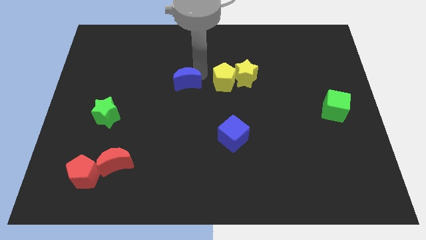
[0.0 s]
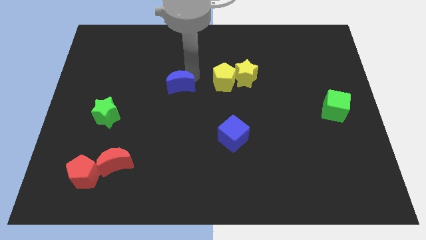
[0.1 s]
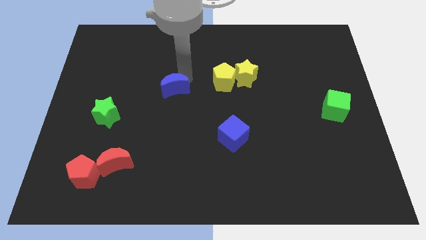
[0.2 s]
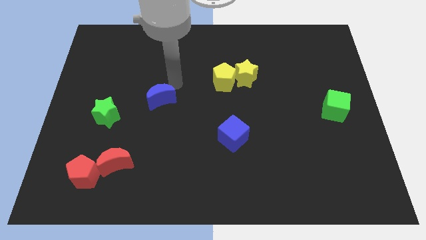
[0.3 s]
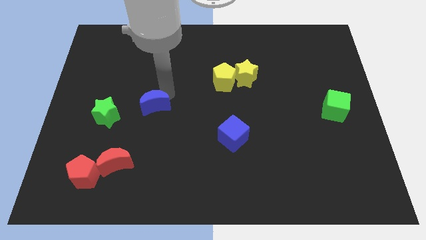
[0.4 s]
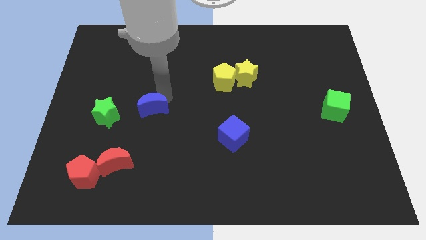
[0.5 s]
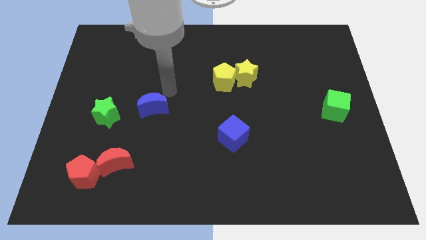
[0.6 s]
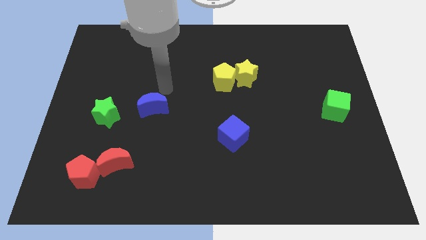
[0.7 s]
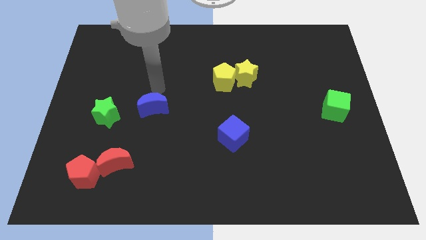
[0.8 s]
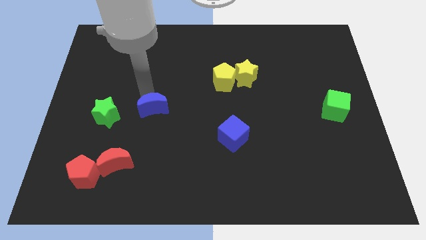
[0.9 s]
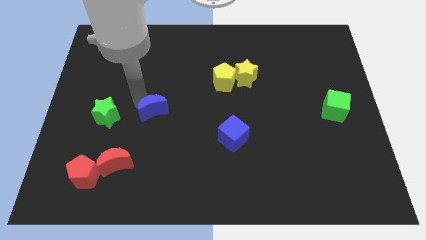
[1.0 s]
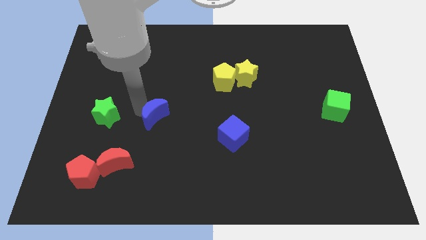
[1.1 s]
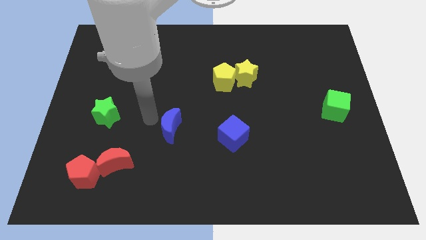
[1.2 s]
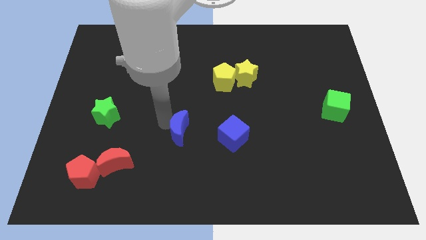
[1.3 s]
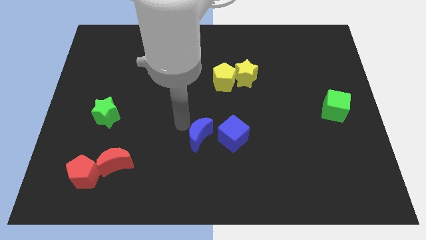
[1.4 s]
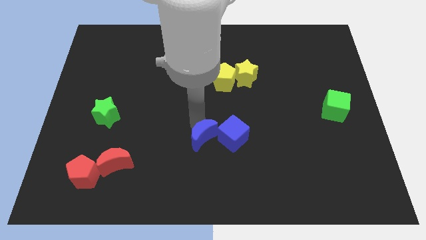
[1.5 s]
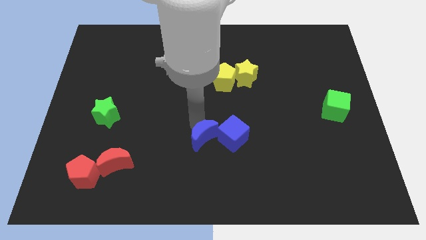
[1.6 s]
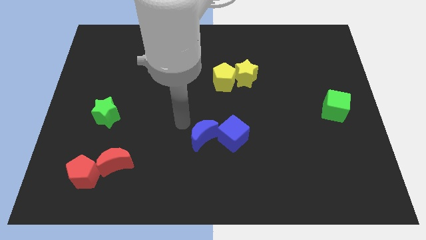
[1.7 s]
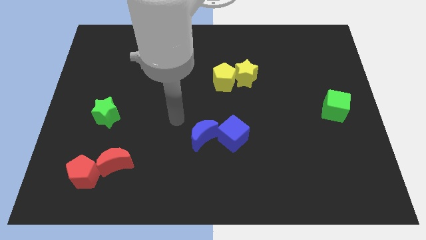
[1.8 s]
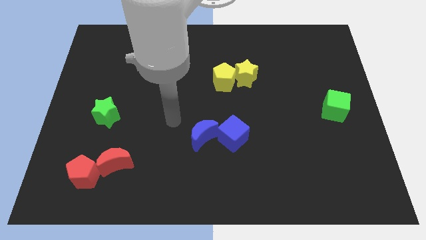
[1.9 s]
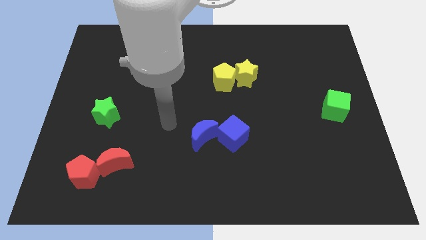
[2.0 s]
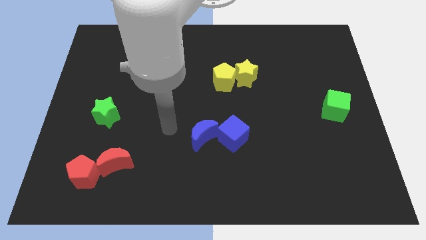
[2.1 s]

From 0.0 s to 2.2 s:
place the blue moon to the left of blue cube

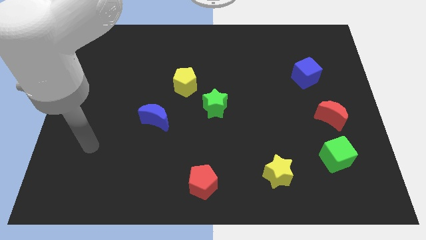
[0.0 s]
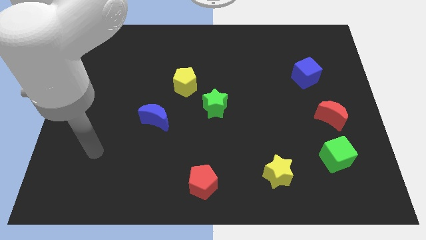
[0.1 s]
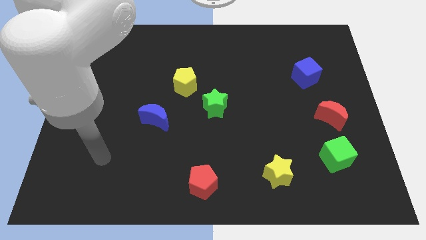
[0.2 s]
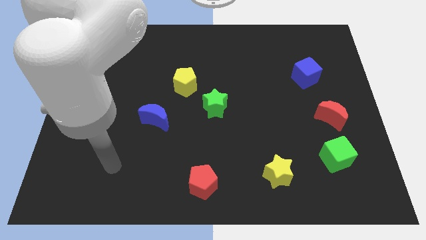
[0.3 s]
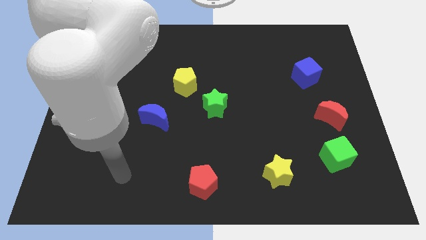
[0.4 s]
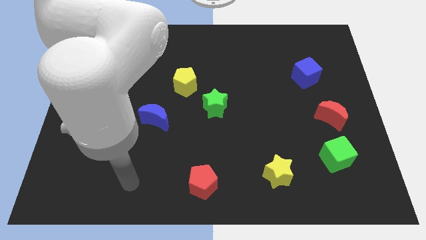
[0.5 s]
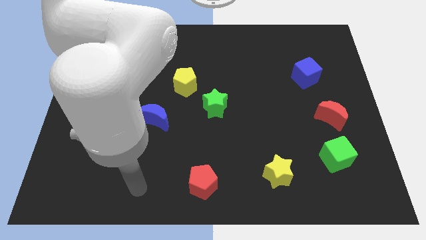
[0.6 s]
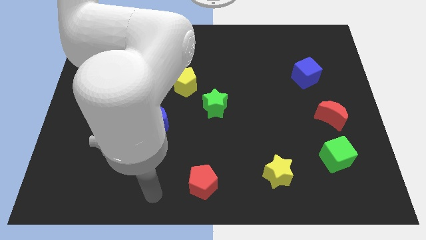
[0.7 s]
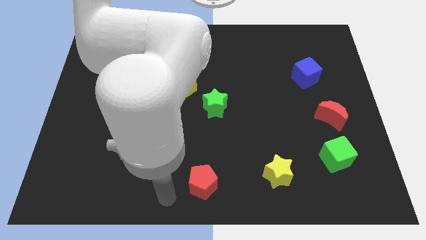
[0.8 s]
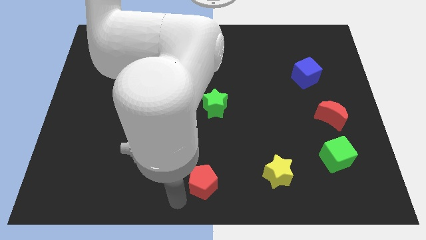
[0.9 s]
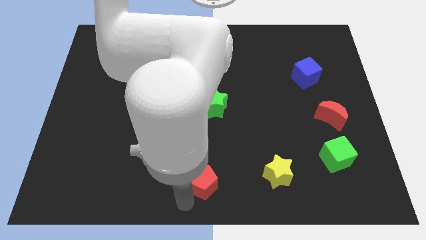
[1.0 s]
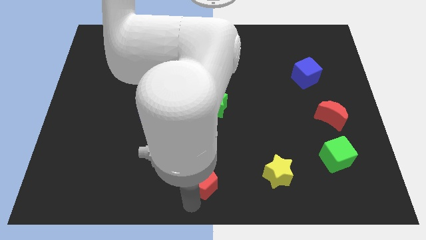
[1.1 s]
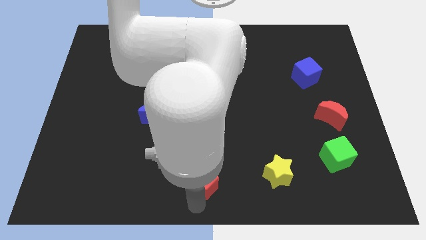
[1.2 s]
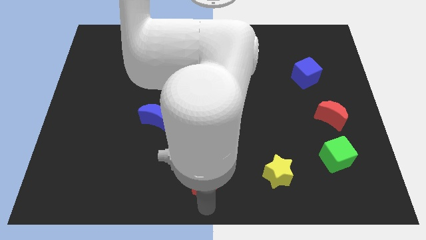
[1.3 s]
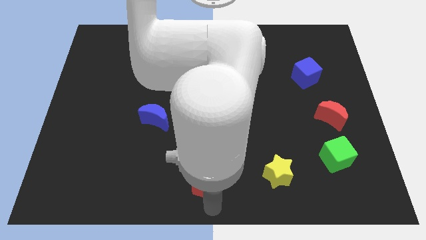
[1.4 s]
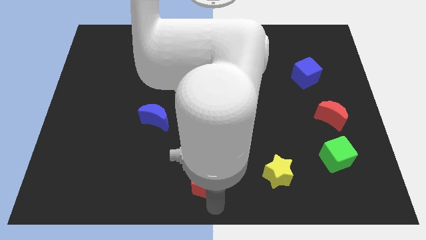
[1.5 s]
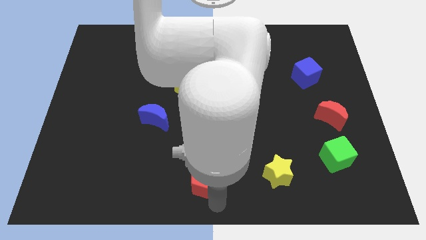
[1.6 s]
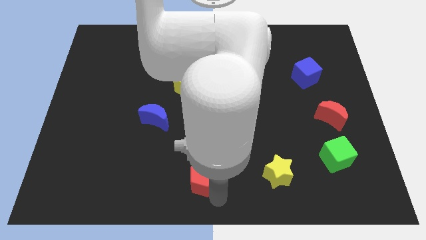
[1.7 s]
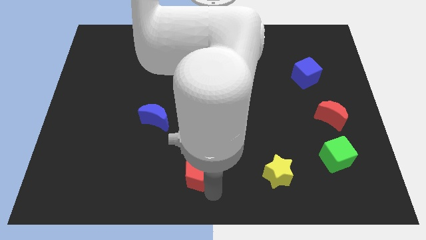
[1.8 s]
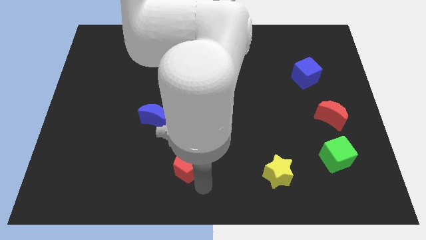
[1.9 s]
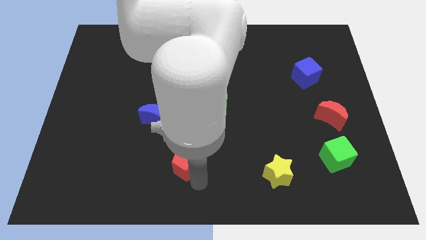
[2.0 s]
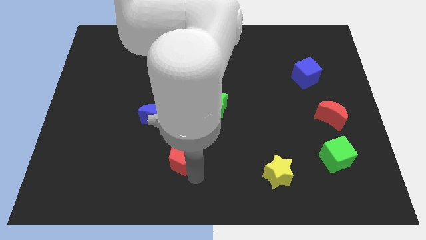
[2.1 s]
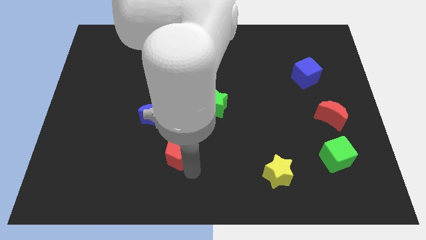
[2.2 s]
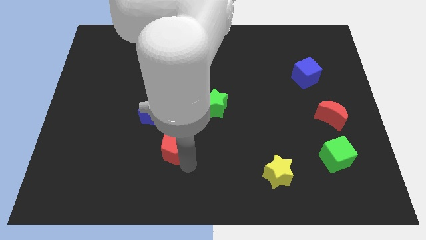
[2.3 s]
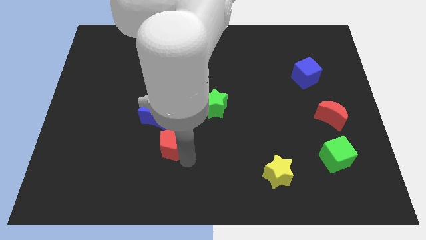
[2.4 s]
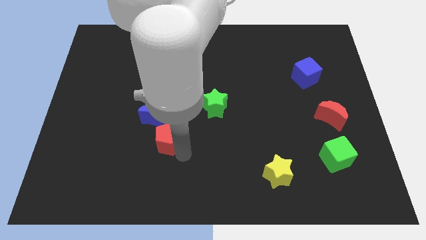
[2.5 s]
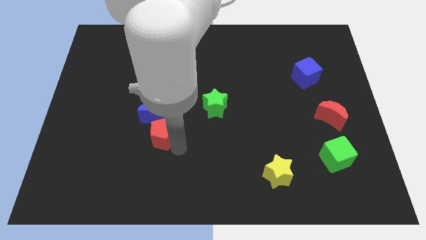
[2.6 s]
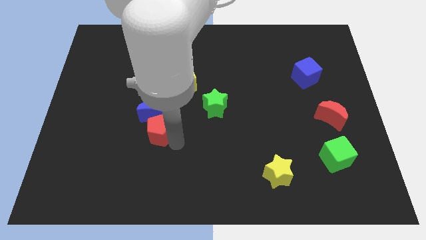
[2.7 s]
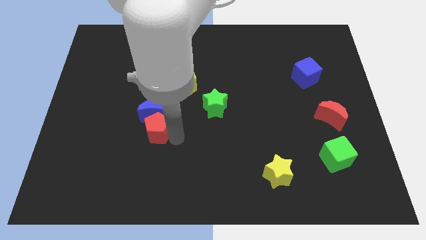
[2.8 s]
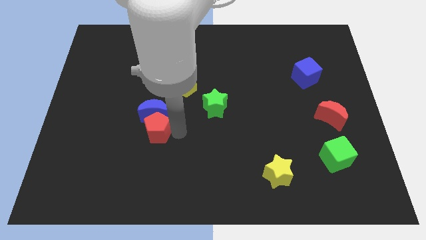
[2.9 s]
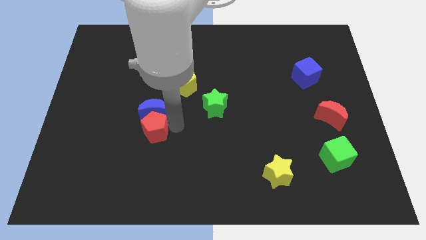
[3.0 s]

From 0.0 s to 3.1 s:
put the red pentagon into the blue moon

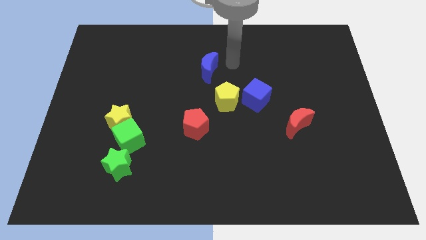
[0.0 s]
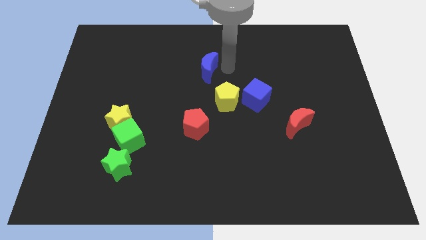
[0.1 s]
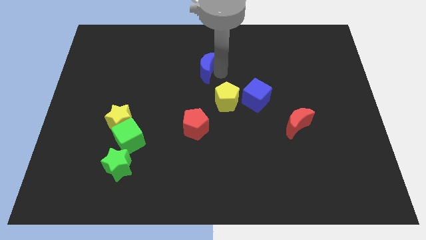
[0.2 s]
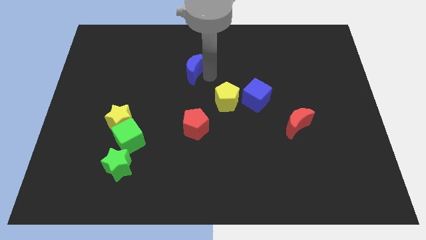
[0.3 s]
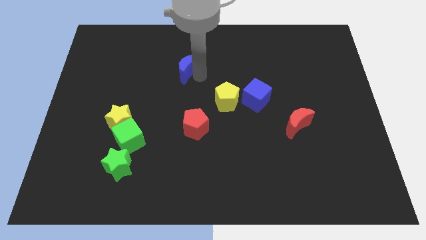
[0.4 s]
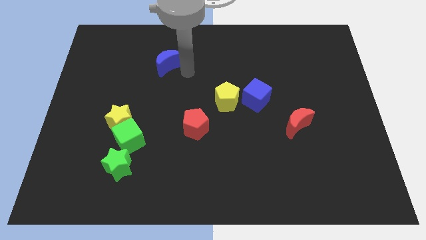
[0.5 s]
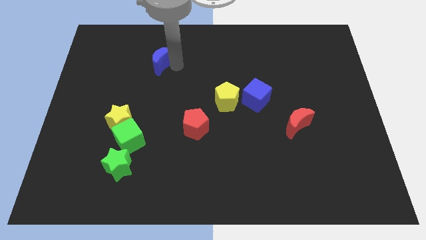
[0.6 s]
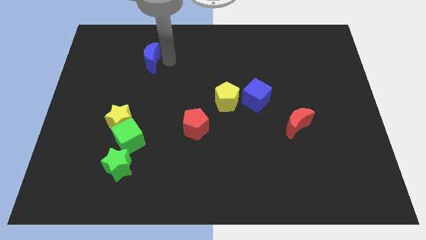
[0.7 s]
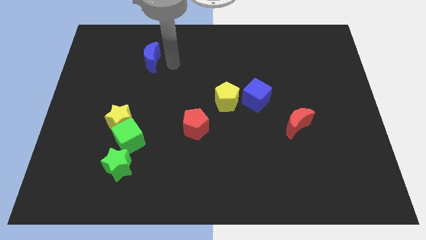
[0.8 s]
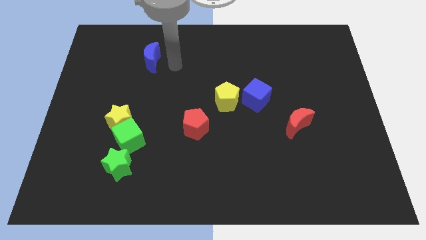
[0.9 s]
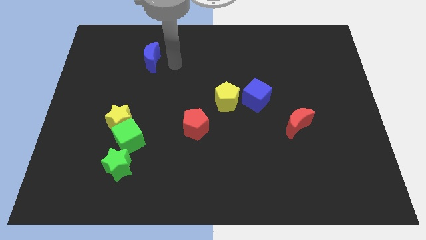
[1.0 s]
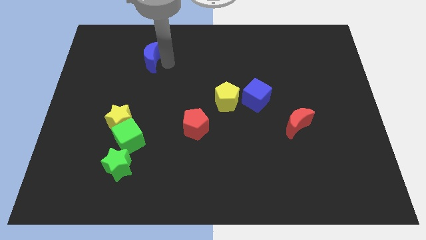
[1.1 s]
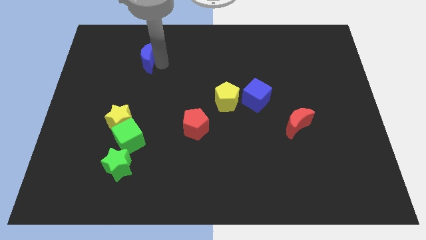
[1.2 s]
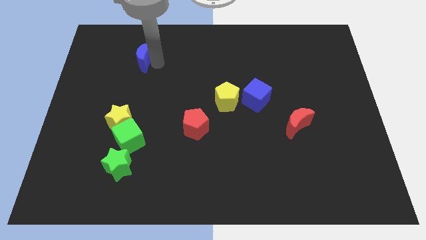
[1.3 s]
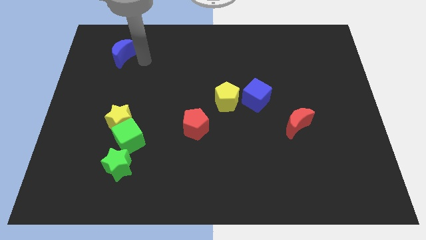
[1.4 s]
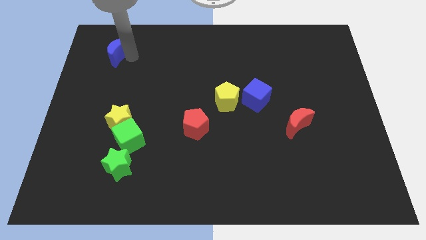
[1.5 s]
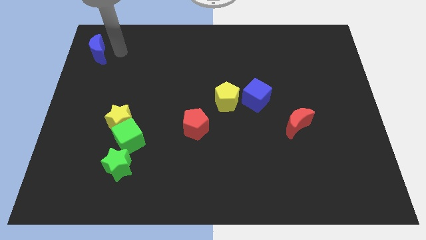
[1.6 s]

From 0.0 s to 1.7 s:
move the blue moon towards the top left

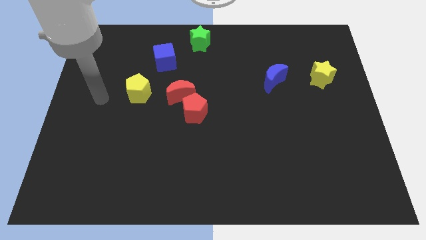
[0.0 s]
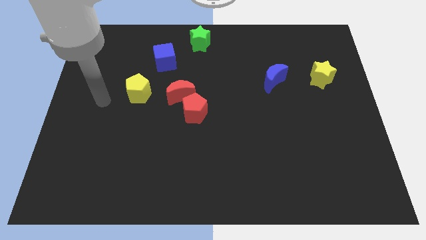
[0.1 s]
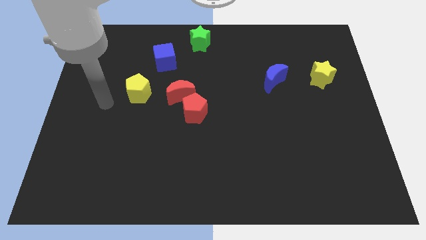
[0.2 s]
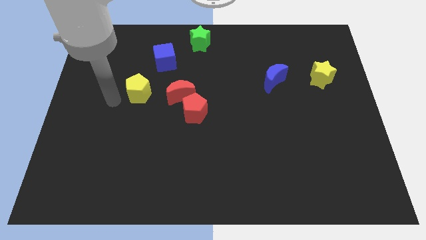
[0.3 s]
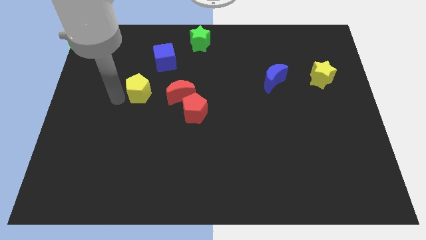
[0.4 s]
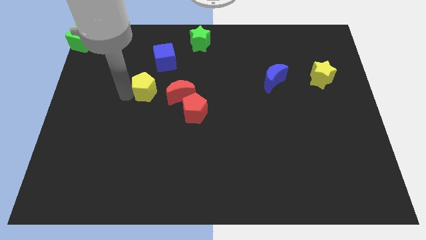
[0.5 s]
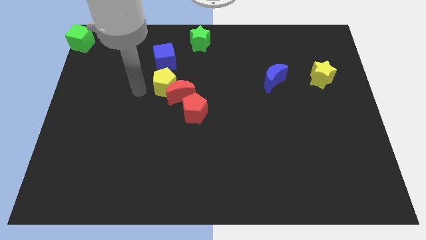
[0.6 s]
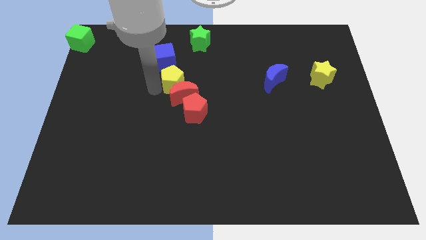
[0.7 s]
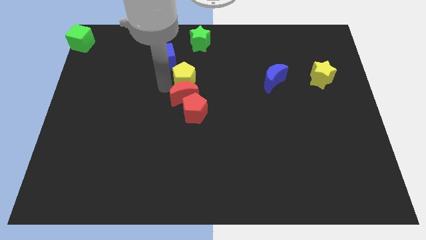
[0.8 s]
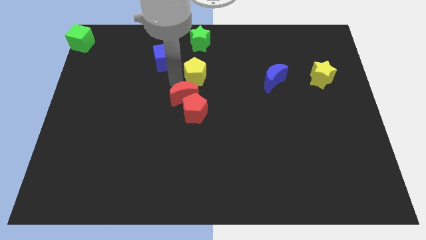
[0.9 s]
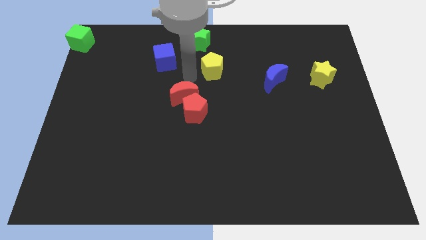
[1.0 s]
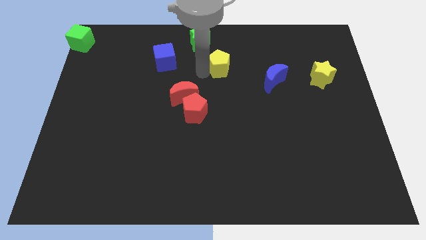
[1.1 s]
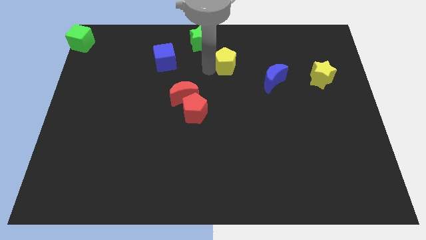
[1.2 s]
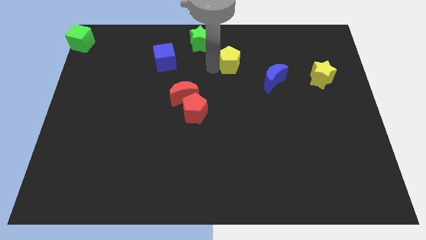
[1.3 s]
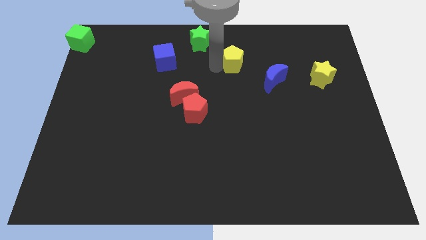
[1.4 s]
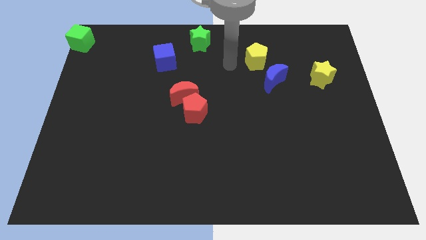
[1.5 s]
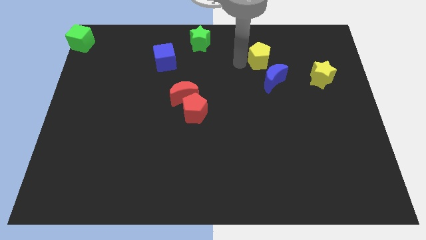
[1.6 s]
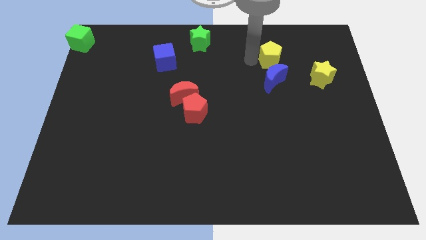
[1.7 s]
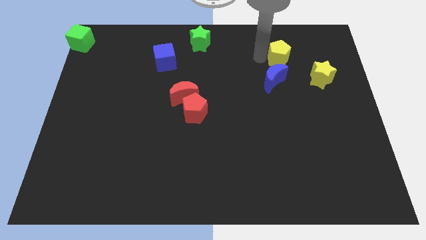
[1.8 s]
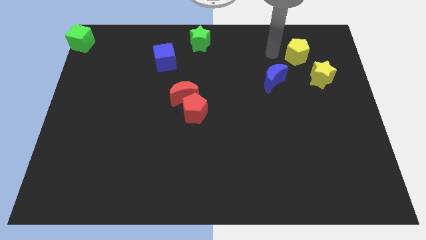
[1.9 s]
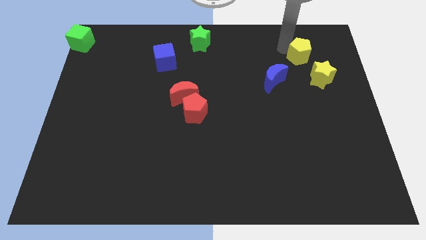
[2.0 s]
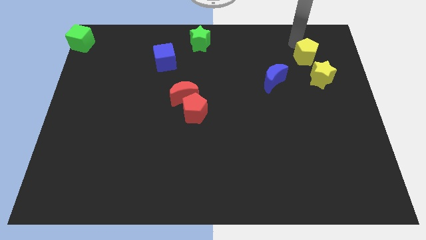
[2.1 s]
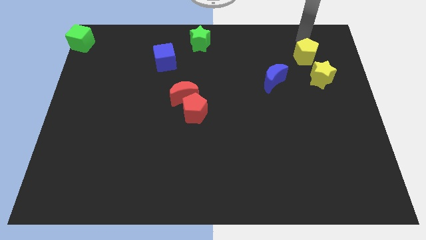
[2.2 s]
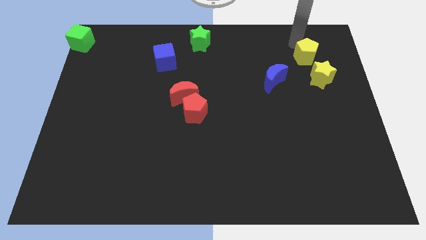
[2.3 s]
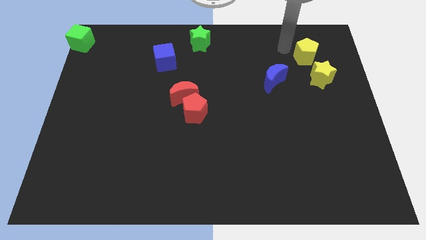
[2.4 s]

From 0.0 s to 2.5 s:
move the yellow pentagon above the yellow star
